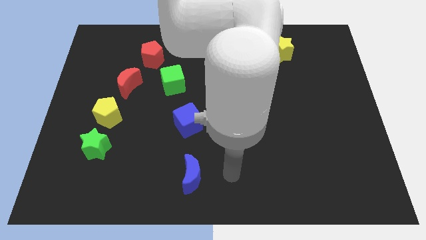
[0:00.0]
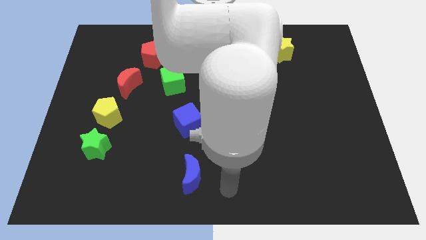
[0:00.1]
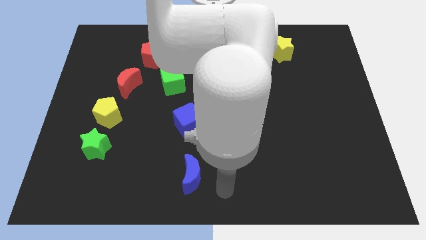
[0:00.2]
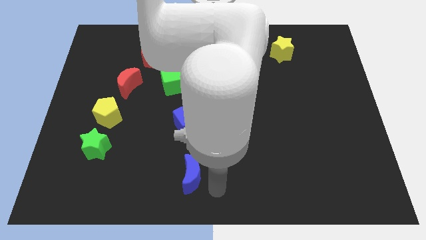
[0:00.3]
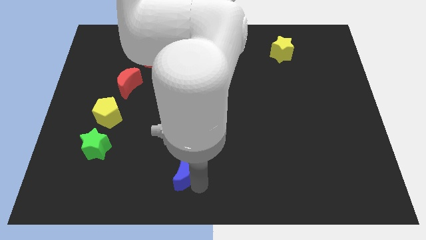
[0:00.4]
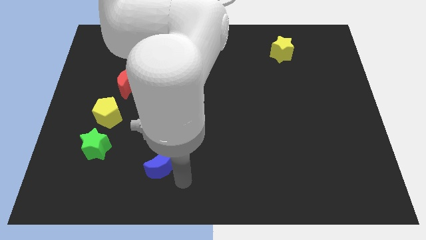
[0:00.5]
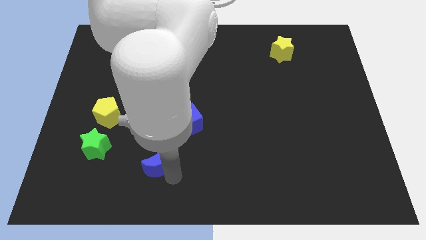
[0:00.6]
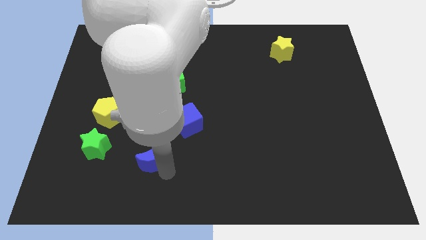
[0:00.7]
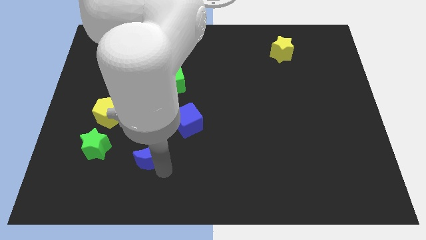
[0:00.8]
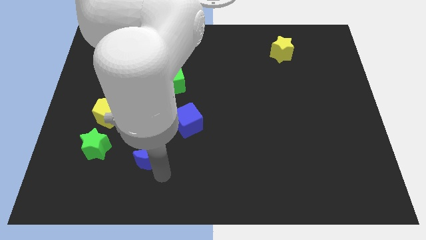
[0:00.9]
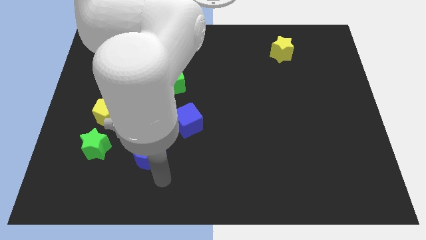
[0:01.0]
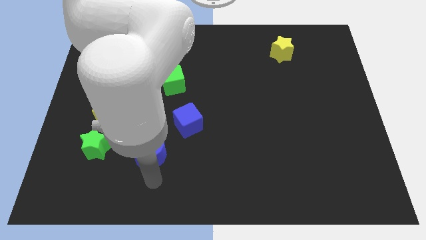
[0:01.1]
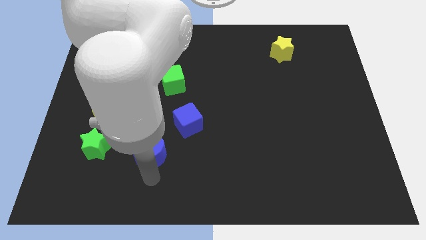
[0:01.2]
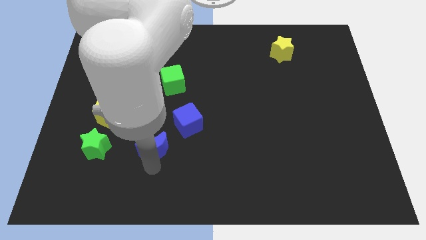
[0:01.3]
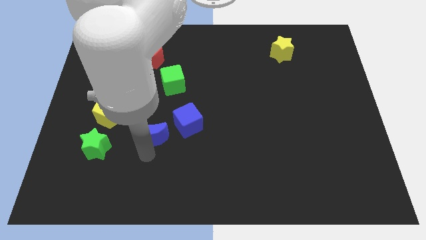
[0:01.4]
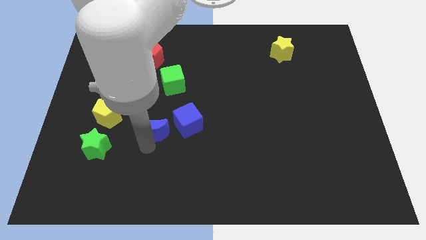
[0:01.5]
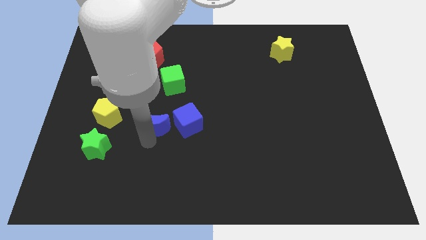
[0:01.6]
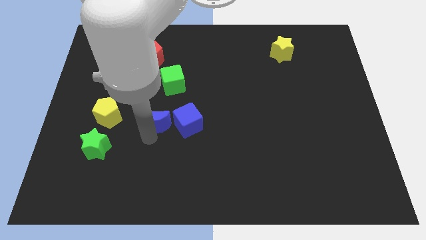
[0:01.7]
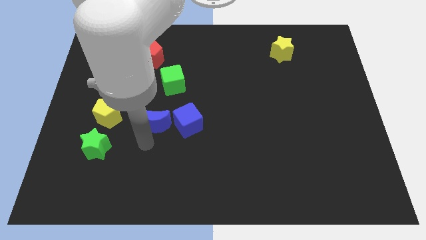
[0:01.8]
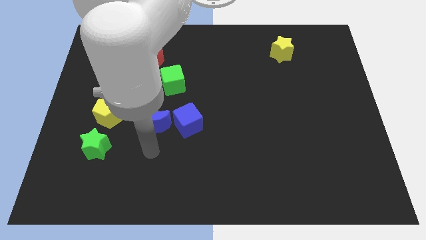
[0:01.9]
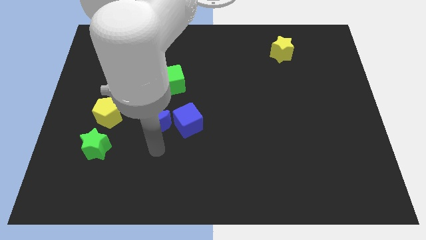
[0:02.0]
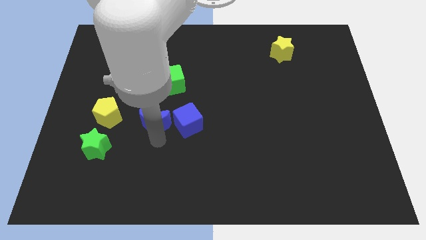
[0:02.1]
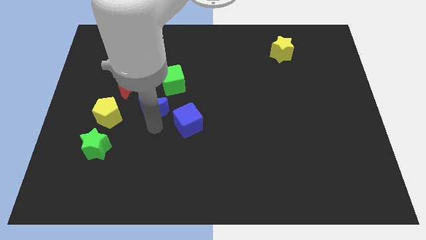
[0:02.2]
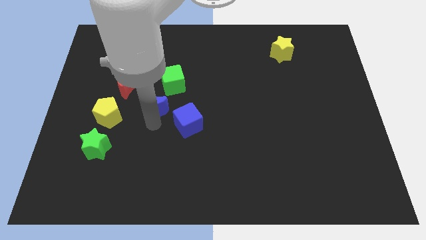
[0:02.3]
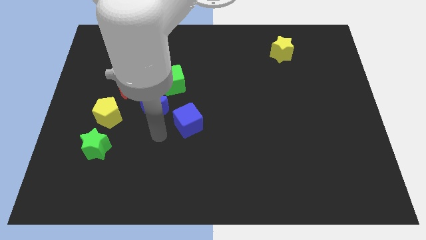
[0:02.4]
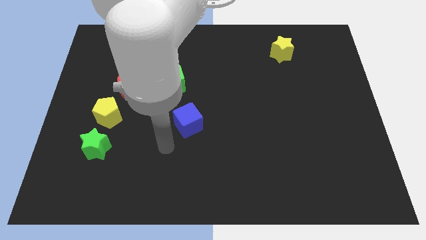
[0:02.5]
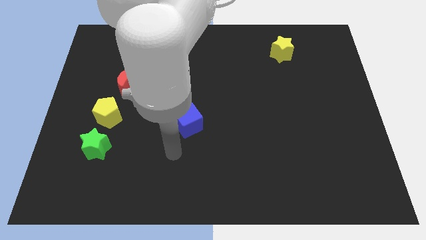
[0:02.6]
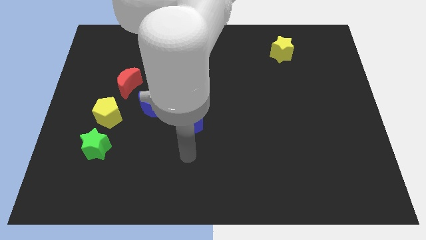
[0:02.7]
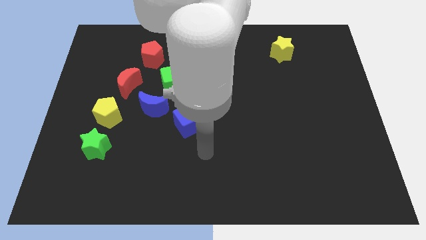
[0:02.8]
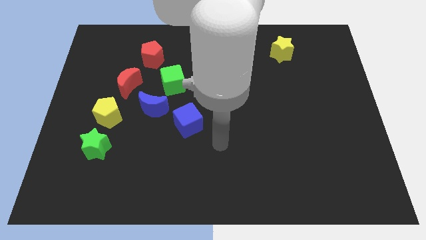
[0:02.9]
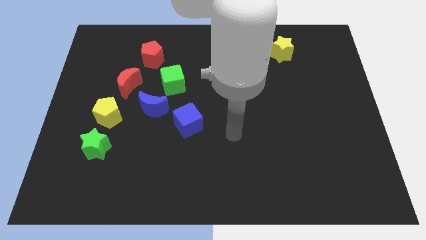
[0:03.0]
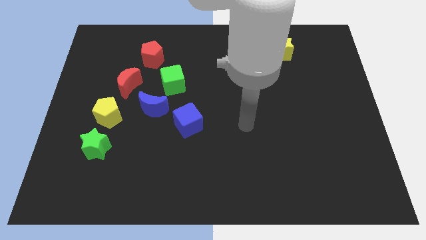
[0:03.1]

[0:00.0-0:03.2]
move the blue crescent between the red moon and blue cube diagonally

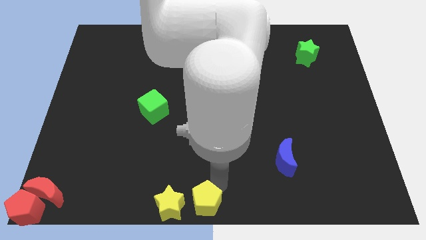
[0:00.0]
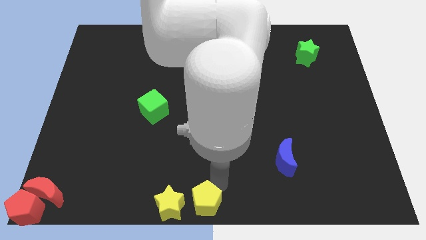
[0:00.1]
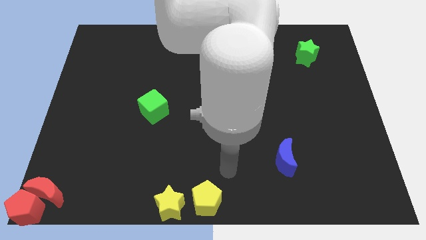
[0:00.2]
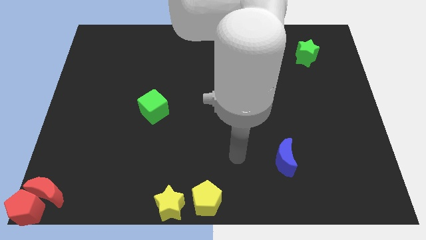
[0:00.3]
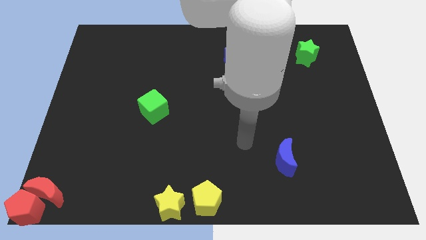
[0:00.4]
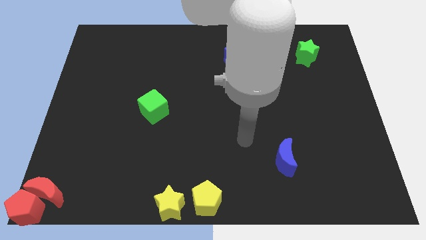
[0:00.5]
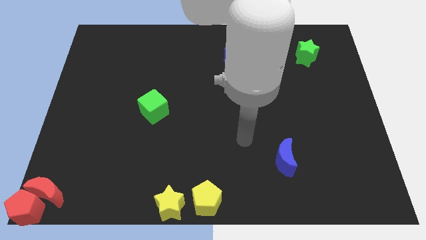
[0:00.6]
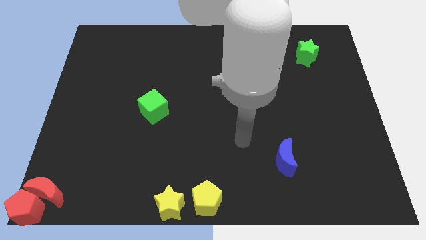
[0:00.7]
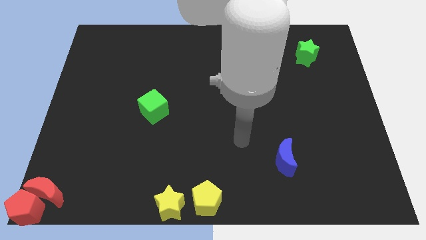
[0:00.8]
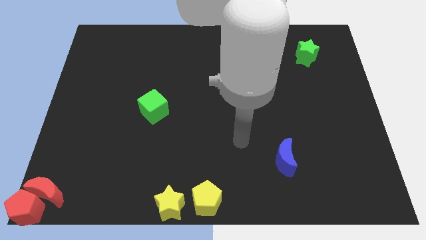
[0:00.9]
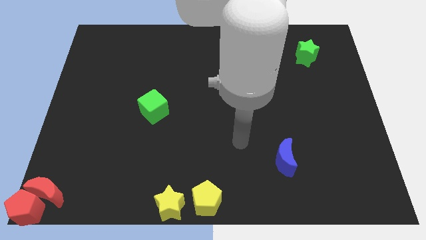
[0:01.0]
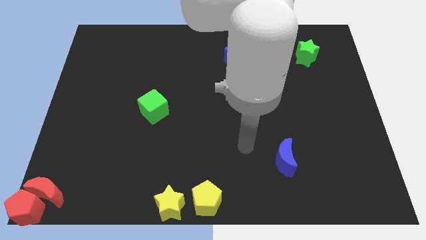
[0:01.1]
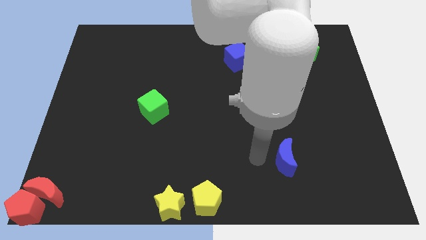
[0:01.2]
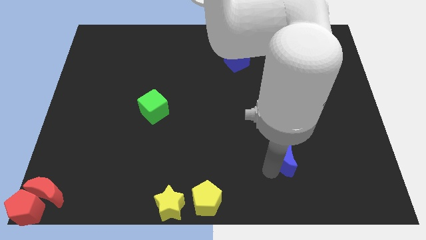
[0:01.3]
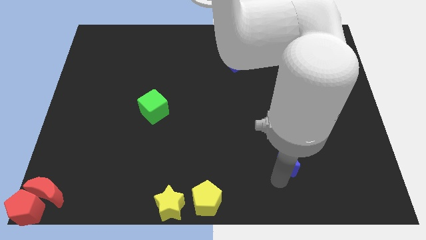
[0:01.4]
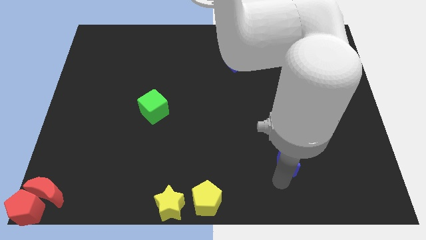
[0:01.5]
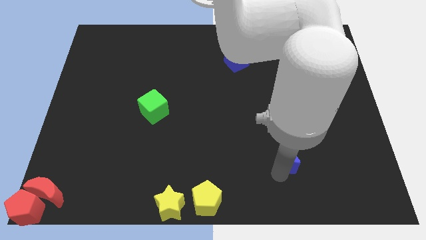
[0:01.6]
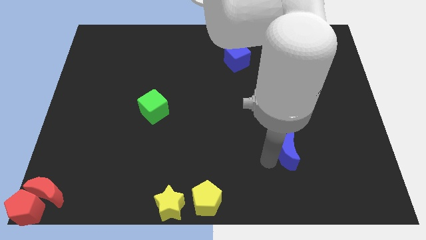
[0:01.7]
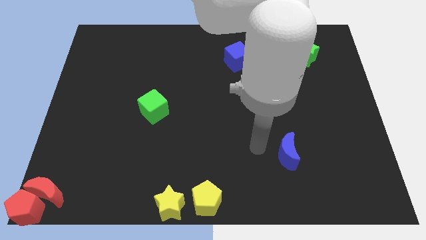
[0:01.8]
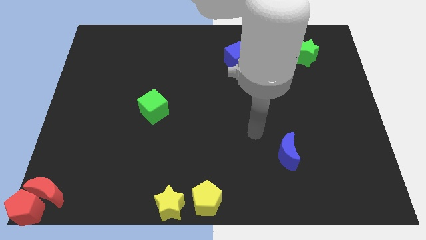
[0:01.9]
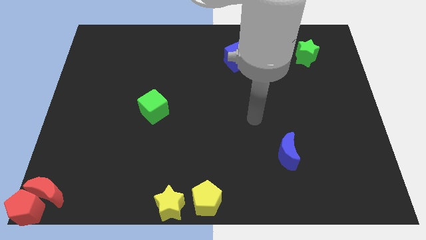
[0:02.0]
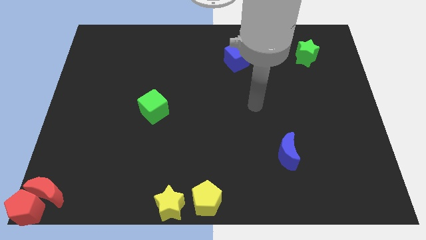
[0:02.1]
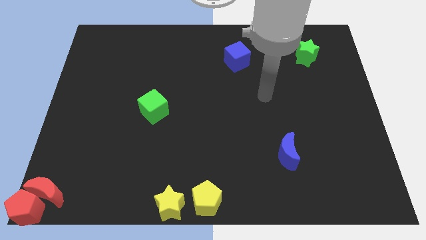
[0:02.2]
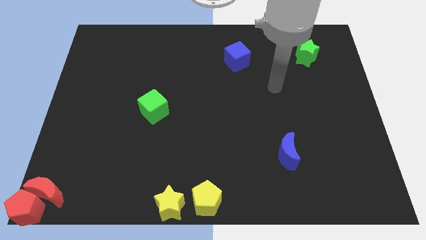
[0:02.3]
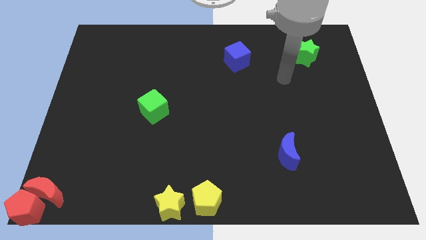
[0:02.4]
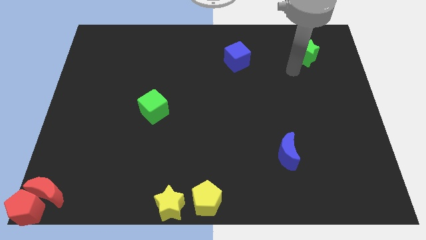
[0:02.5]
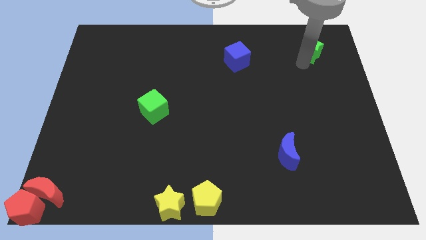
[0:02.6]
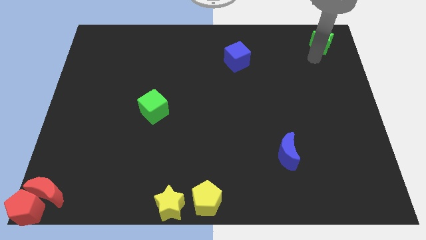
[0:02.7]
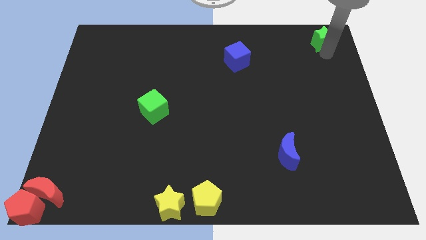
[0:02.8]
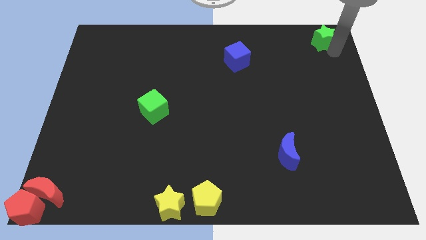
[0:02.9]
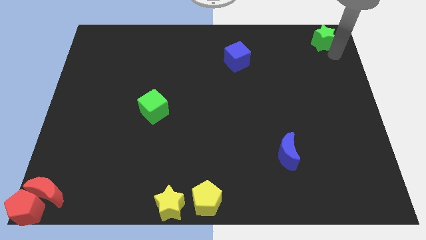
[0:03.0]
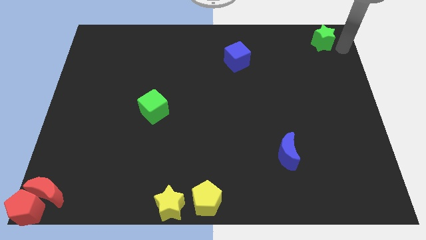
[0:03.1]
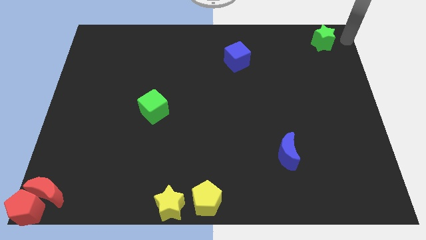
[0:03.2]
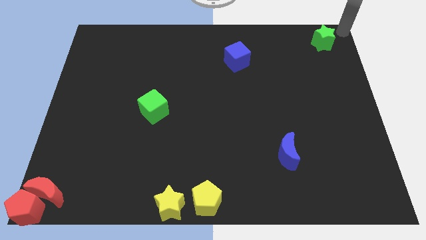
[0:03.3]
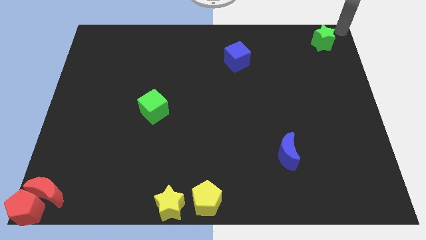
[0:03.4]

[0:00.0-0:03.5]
move your arm away from the yellow pentagon

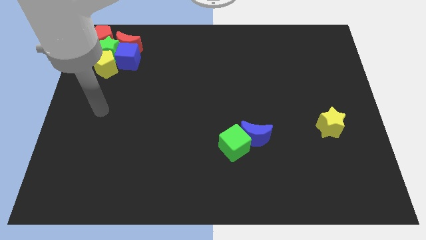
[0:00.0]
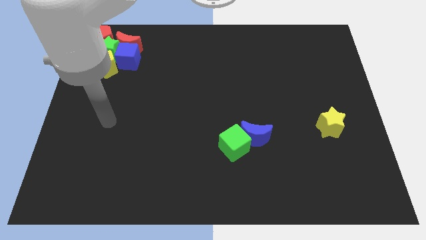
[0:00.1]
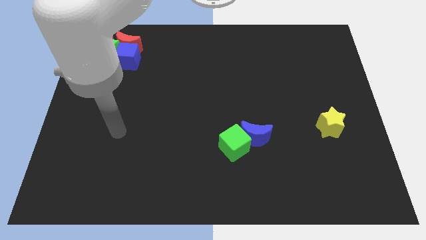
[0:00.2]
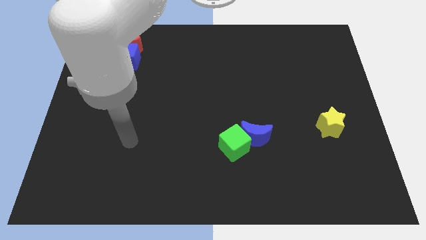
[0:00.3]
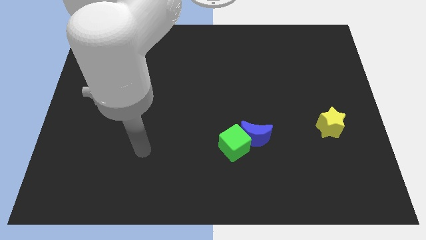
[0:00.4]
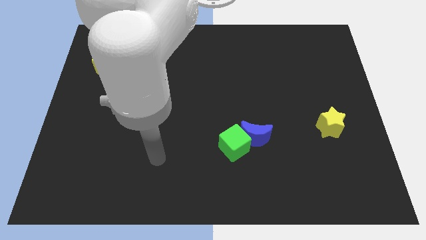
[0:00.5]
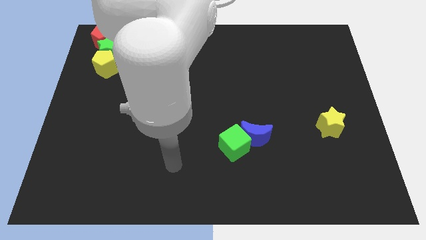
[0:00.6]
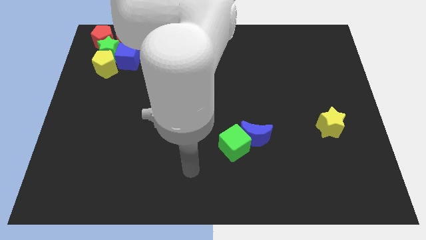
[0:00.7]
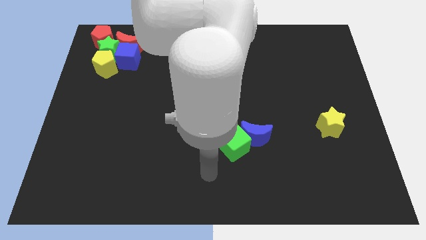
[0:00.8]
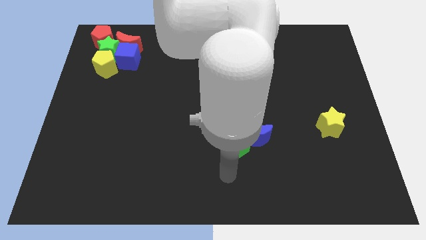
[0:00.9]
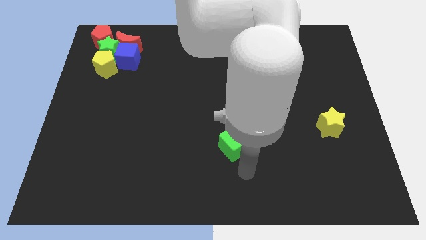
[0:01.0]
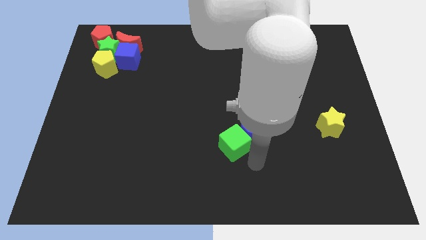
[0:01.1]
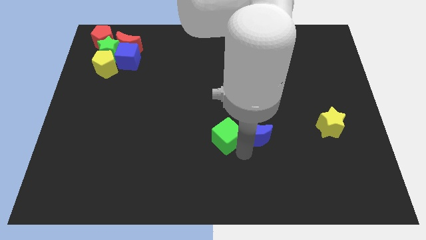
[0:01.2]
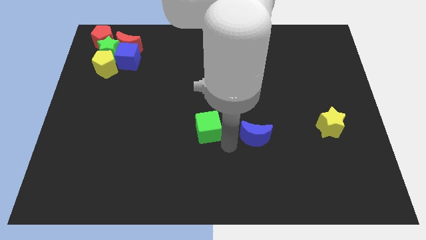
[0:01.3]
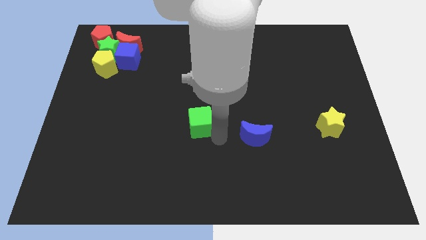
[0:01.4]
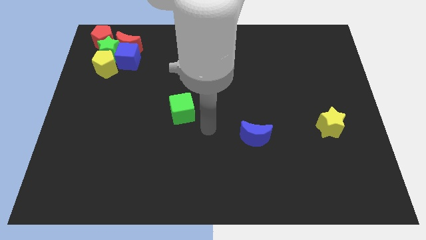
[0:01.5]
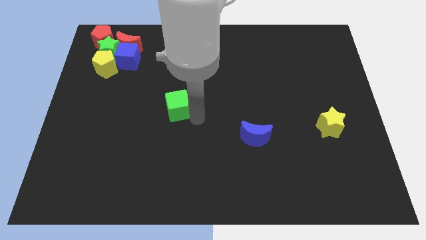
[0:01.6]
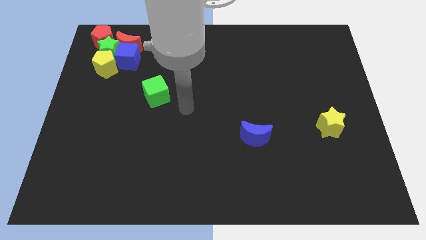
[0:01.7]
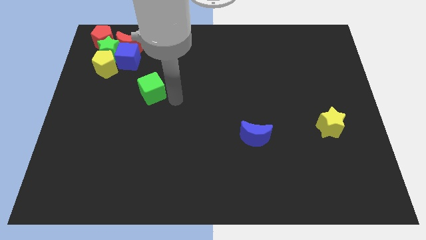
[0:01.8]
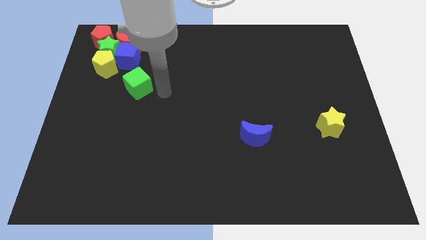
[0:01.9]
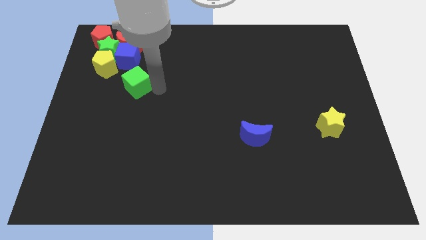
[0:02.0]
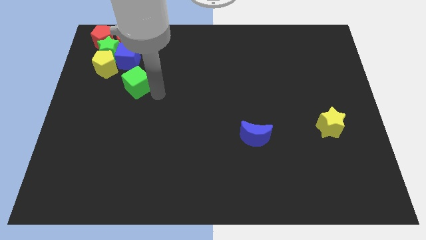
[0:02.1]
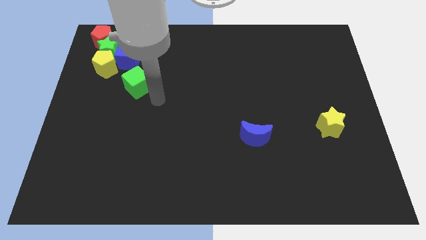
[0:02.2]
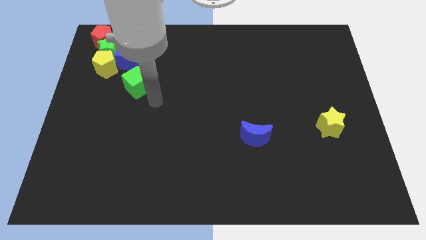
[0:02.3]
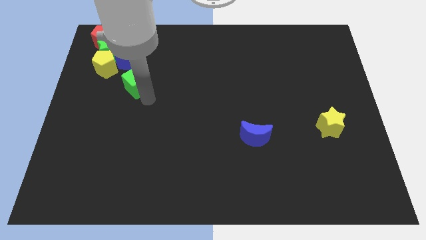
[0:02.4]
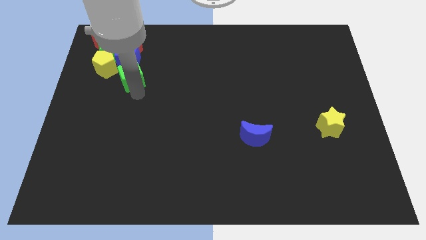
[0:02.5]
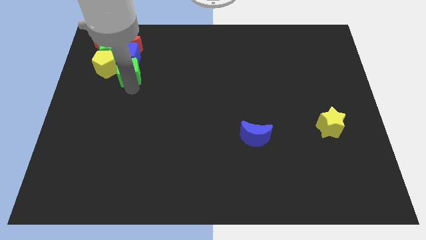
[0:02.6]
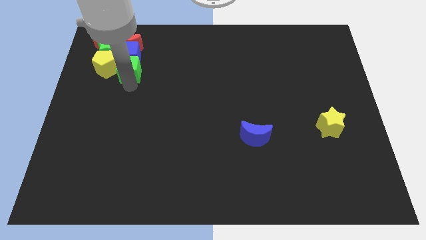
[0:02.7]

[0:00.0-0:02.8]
push the green cube into the blue cube
